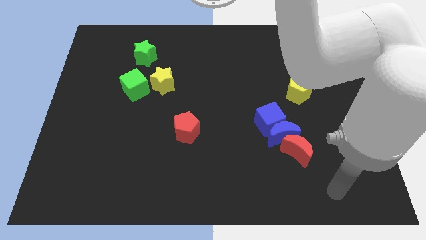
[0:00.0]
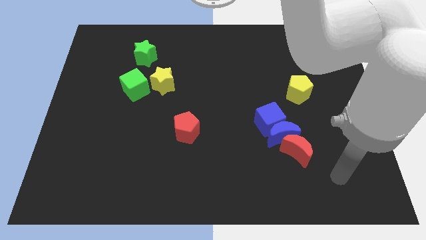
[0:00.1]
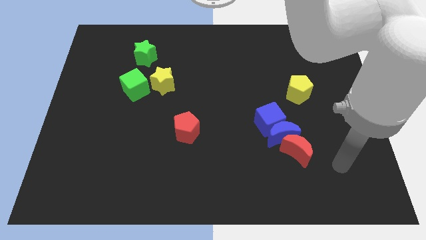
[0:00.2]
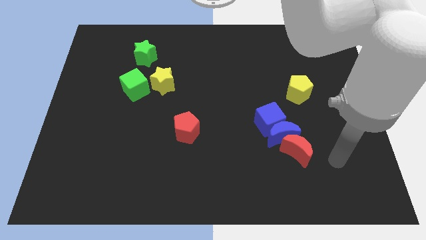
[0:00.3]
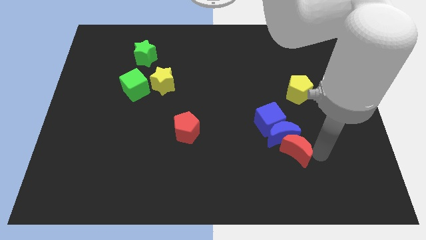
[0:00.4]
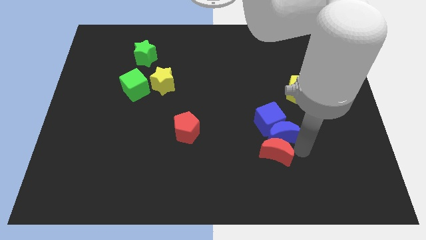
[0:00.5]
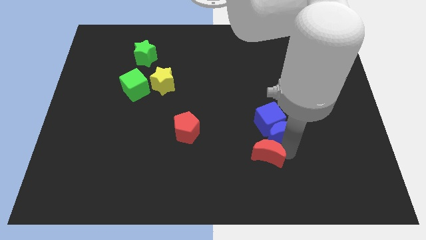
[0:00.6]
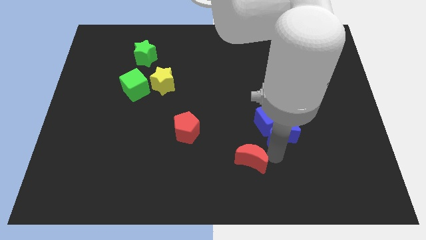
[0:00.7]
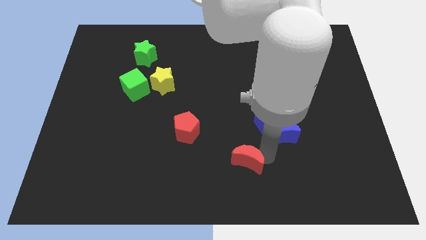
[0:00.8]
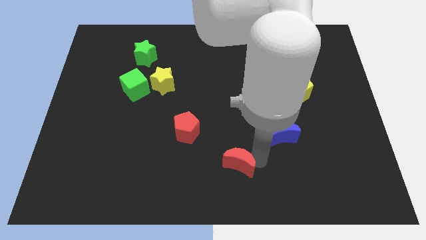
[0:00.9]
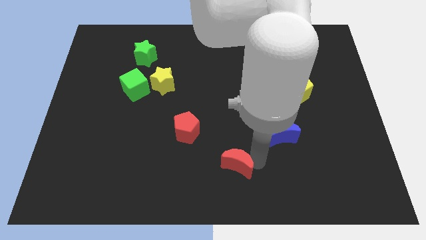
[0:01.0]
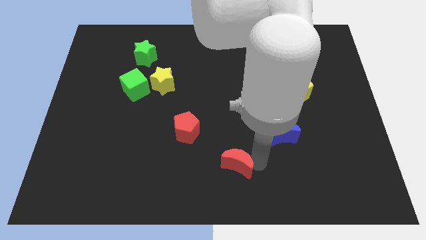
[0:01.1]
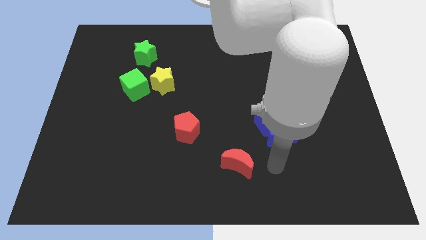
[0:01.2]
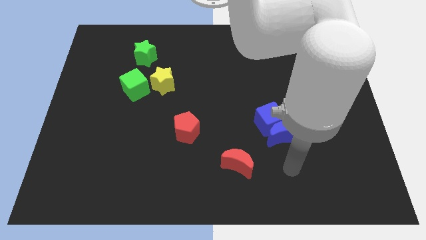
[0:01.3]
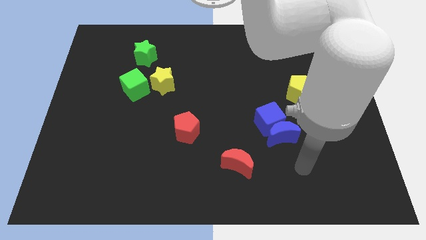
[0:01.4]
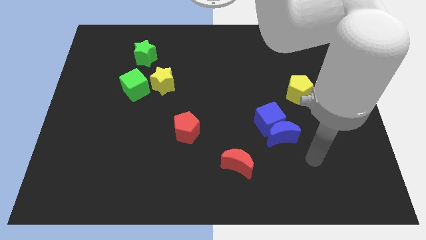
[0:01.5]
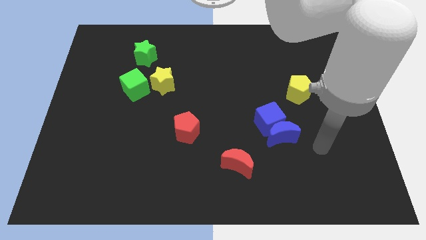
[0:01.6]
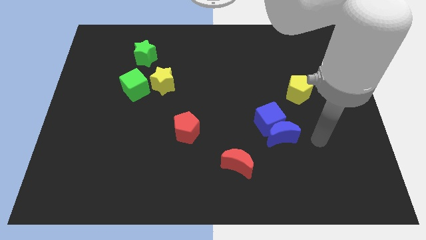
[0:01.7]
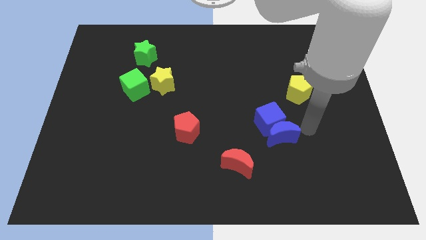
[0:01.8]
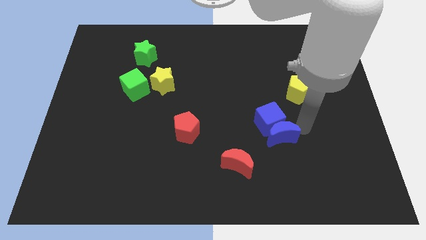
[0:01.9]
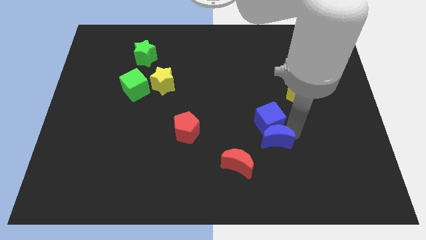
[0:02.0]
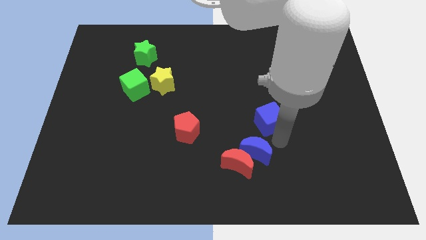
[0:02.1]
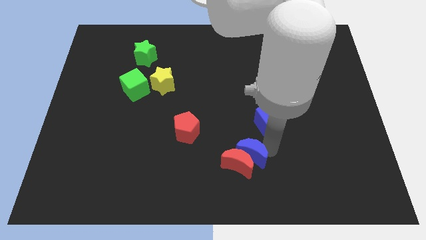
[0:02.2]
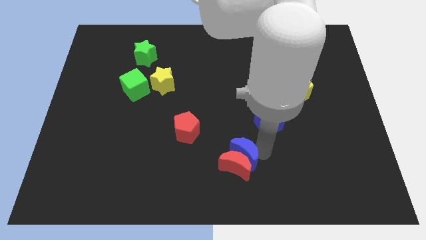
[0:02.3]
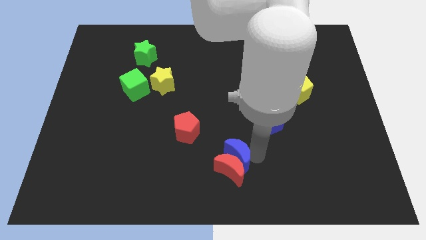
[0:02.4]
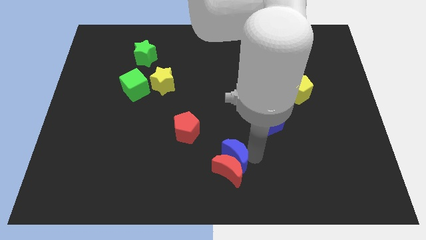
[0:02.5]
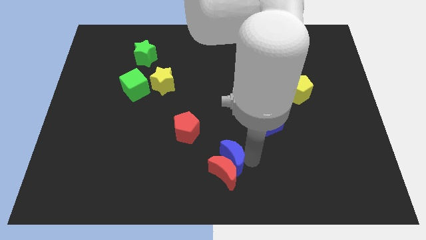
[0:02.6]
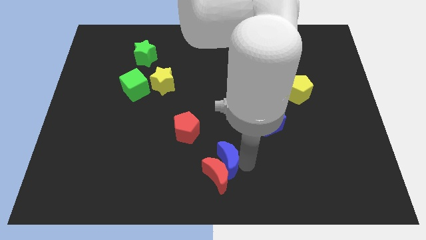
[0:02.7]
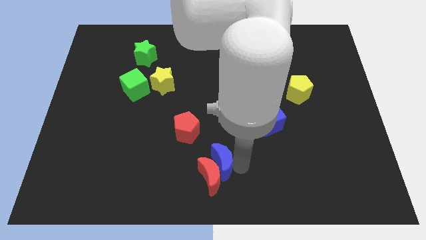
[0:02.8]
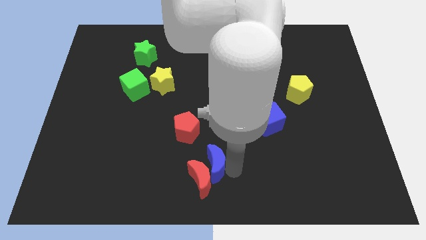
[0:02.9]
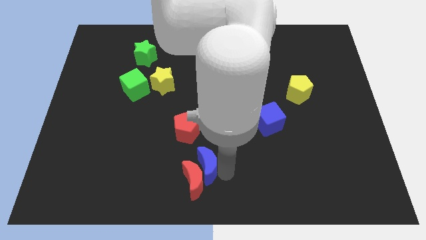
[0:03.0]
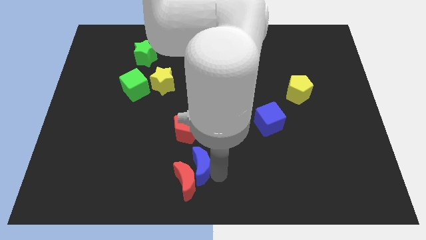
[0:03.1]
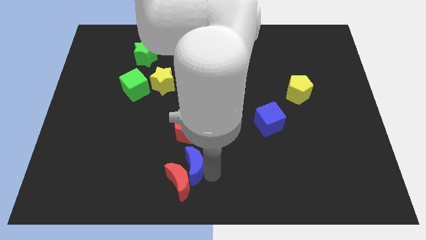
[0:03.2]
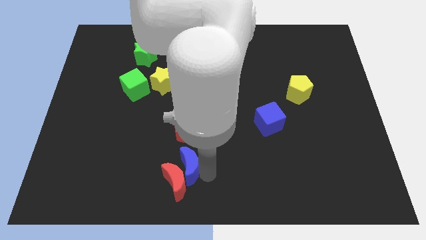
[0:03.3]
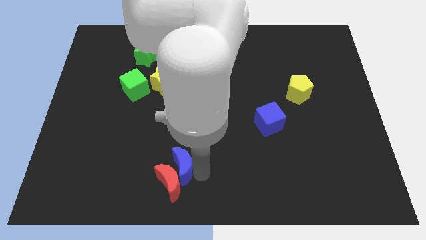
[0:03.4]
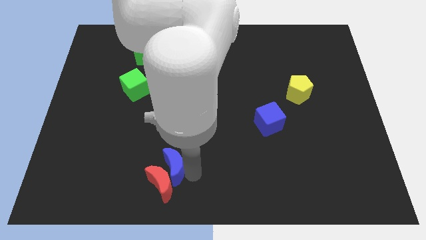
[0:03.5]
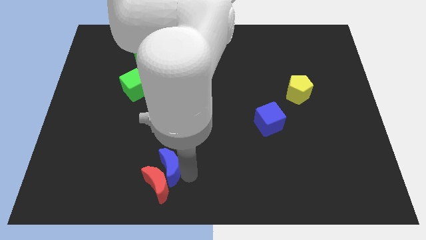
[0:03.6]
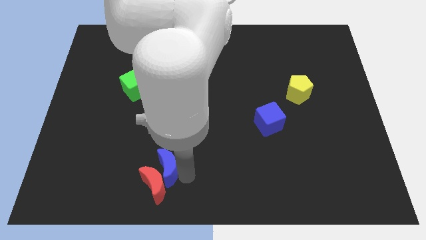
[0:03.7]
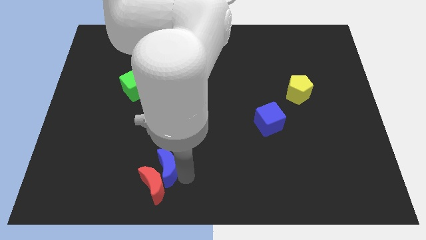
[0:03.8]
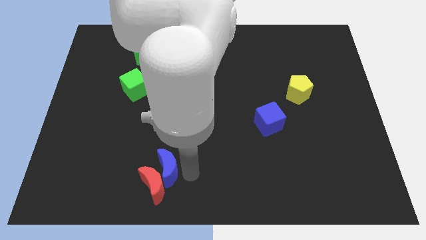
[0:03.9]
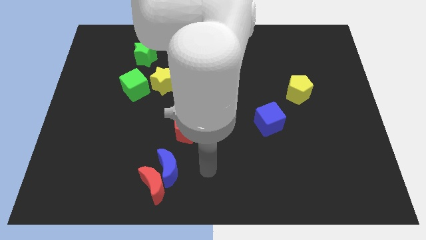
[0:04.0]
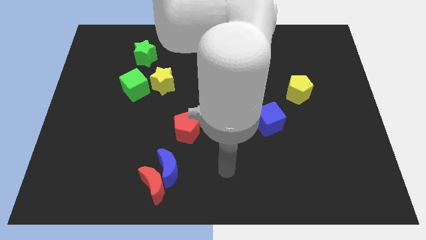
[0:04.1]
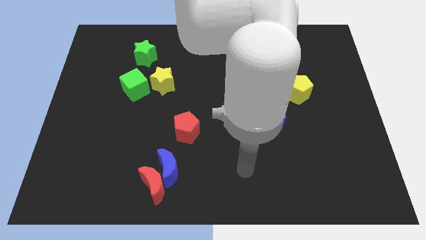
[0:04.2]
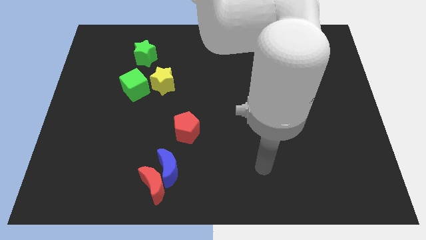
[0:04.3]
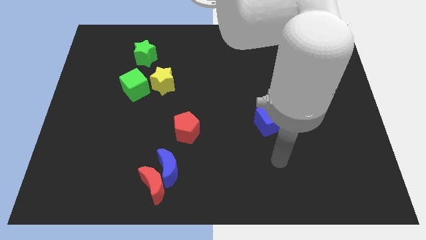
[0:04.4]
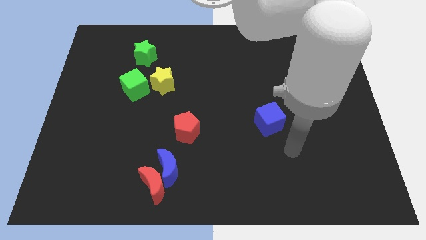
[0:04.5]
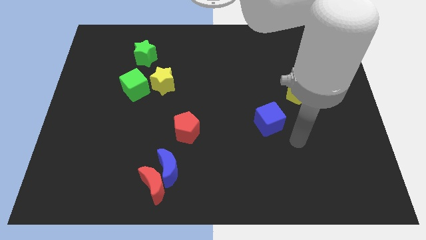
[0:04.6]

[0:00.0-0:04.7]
push blue moon and red moon to bottom of the board

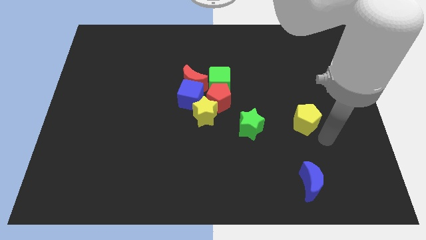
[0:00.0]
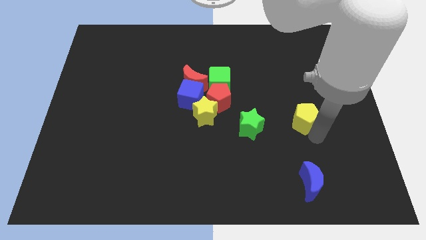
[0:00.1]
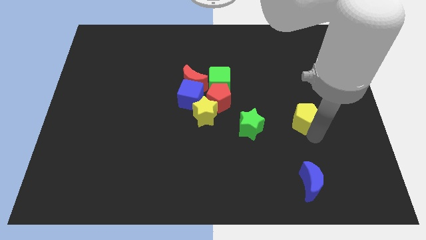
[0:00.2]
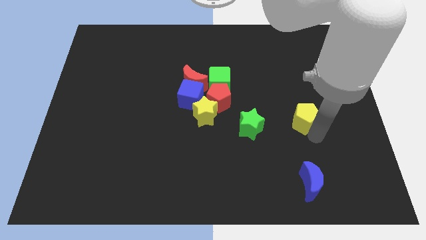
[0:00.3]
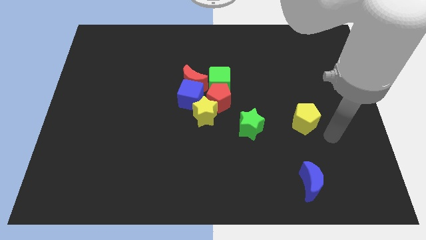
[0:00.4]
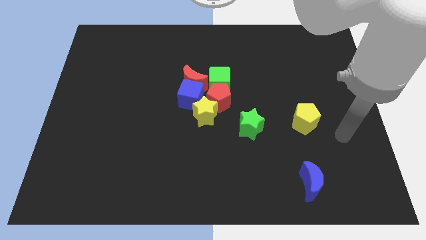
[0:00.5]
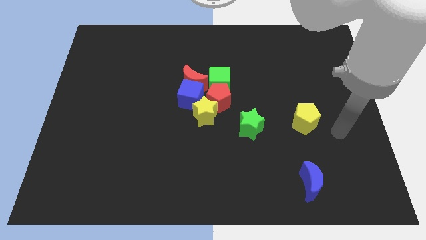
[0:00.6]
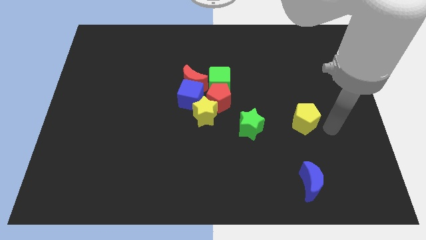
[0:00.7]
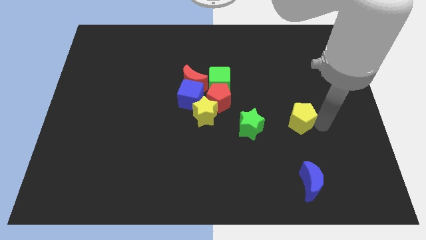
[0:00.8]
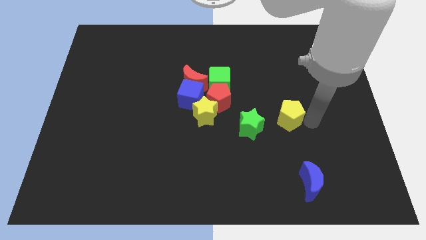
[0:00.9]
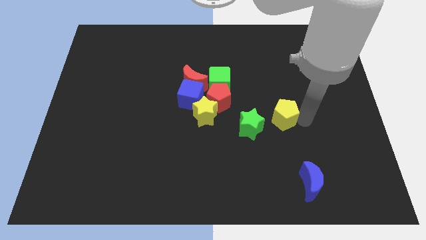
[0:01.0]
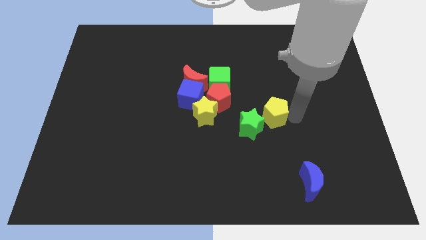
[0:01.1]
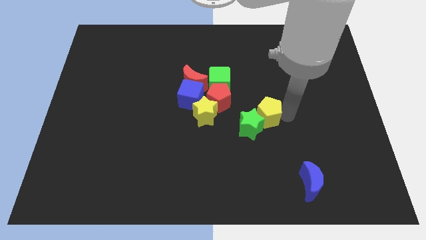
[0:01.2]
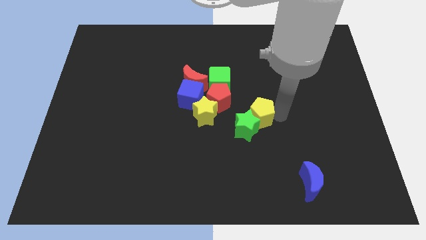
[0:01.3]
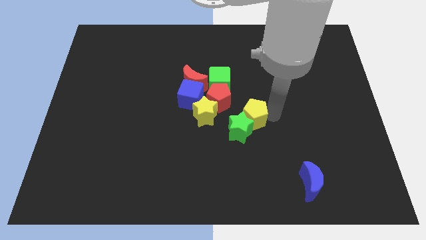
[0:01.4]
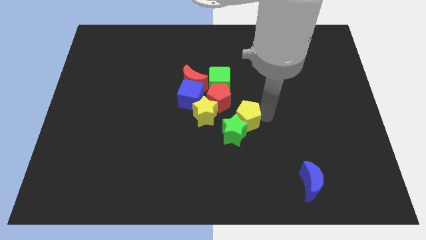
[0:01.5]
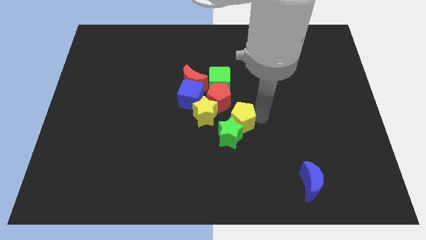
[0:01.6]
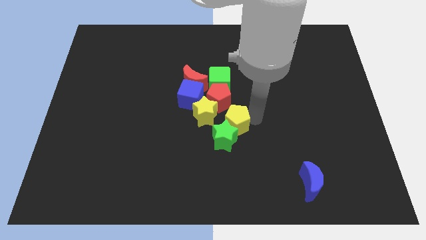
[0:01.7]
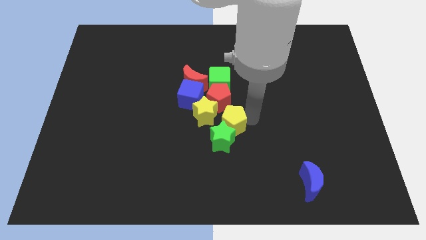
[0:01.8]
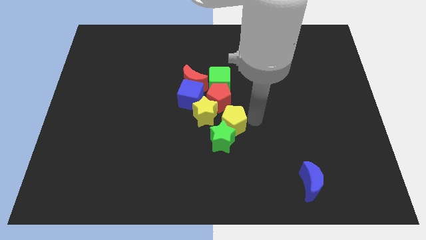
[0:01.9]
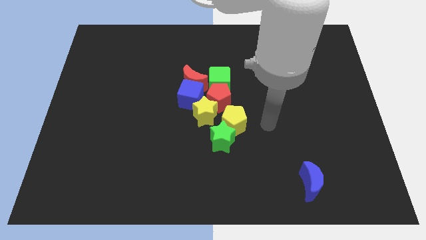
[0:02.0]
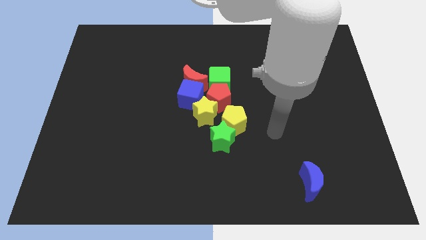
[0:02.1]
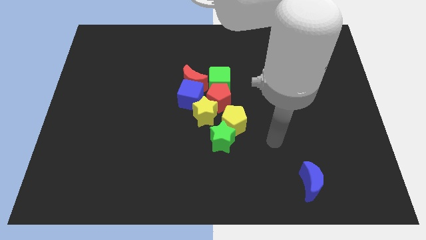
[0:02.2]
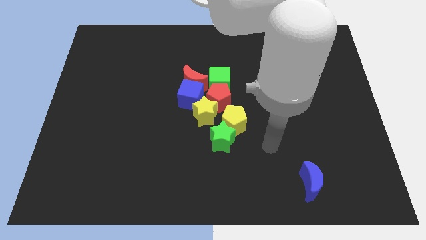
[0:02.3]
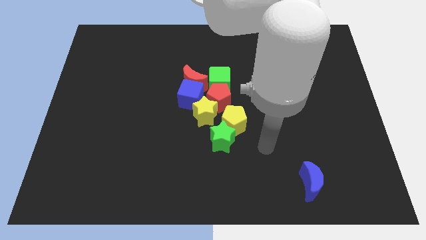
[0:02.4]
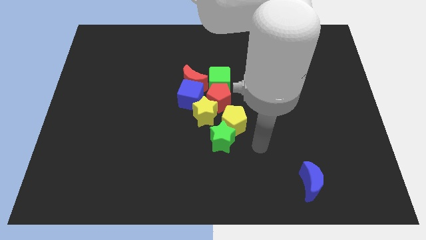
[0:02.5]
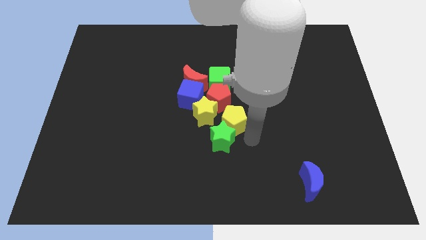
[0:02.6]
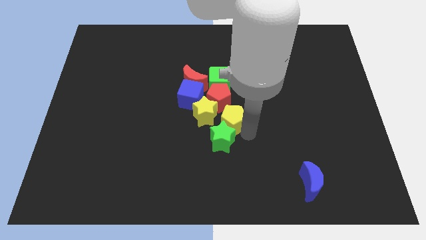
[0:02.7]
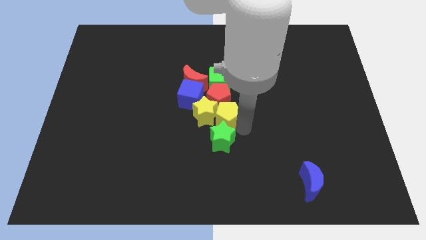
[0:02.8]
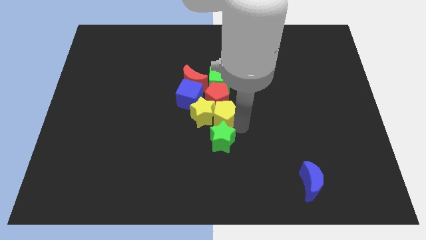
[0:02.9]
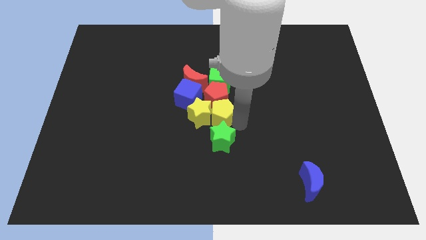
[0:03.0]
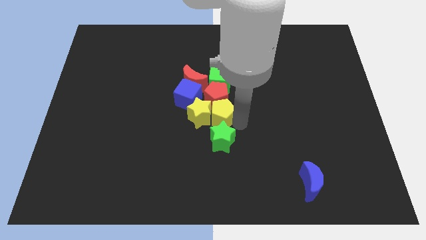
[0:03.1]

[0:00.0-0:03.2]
push the yellow pentagon into the yellow star

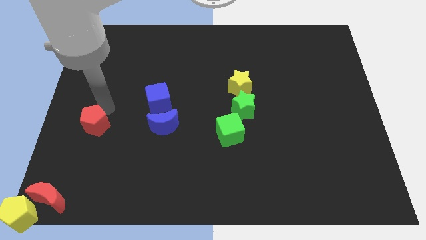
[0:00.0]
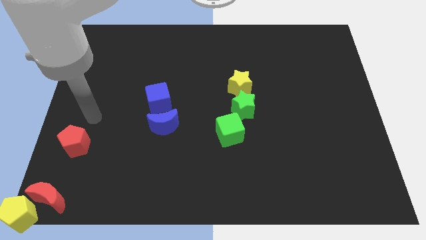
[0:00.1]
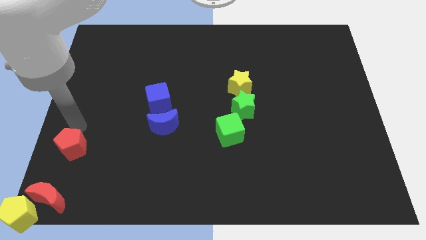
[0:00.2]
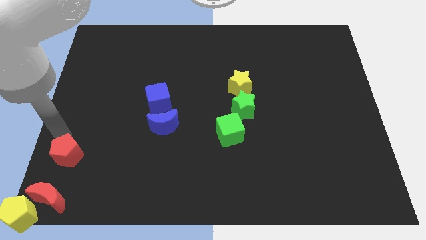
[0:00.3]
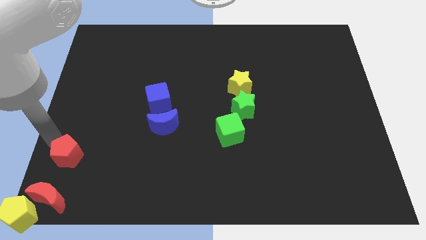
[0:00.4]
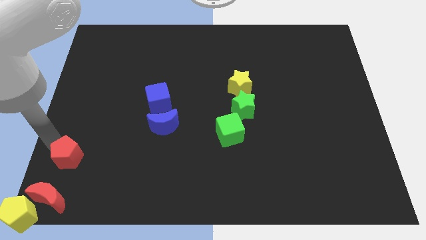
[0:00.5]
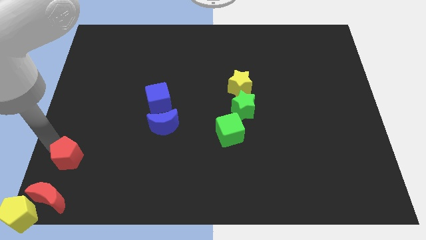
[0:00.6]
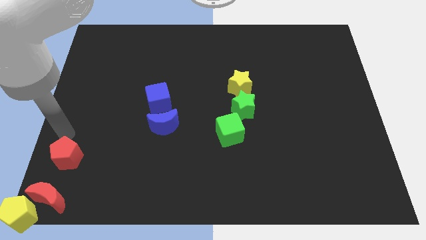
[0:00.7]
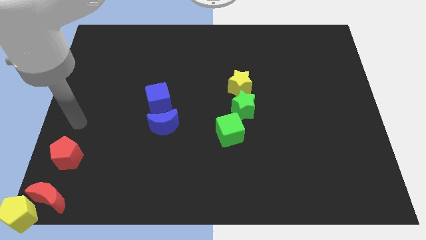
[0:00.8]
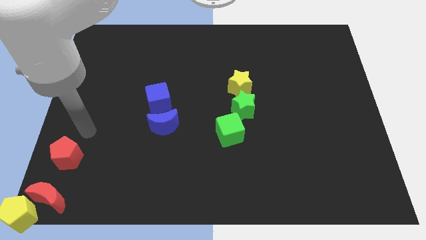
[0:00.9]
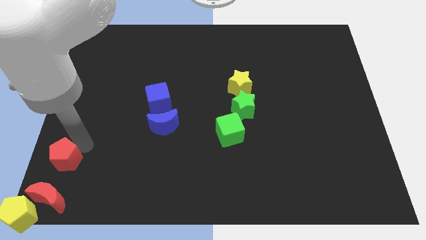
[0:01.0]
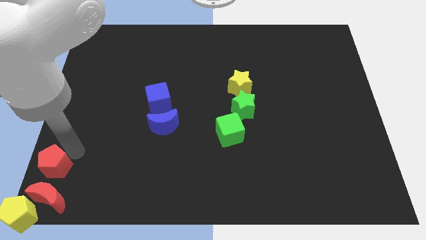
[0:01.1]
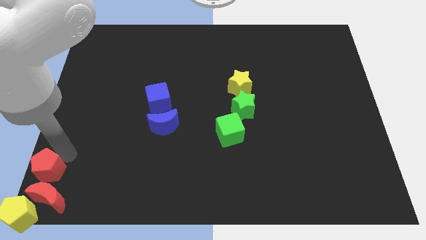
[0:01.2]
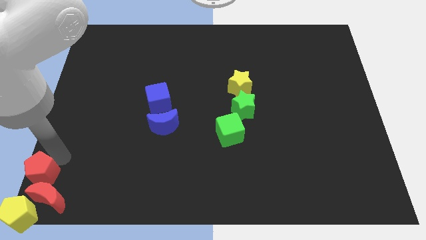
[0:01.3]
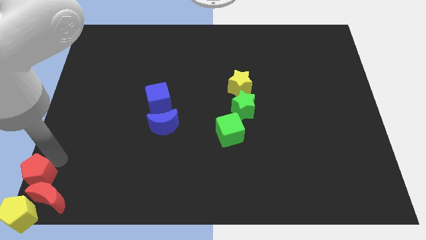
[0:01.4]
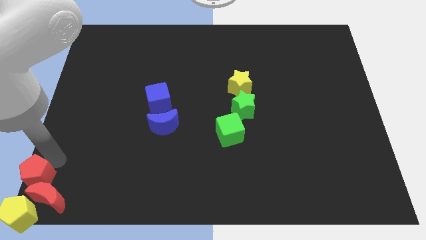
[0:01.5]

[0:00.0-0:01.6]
place the red pentagon above the red crescent
